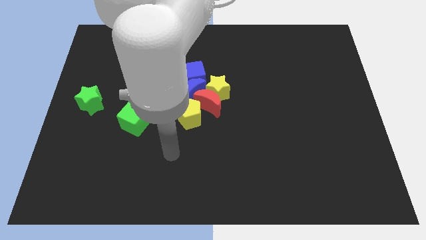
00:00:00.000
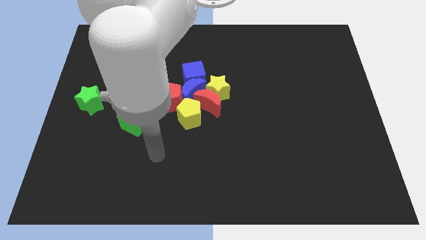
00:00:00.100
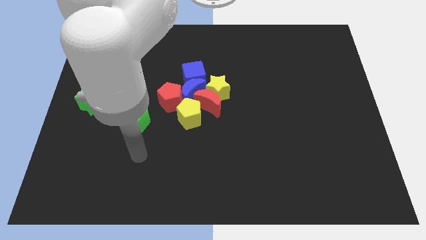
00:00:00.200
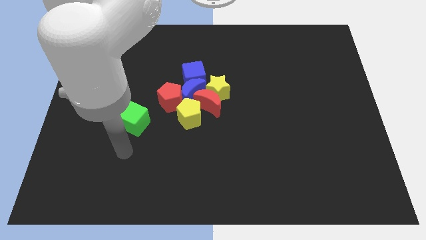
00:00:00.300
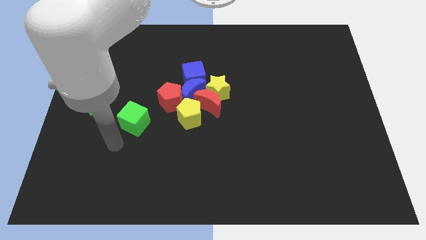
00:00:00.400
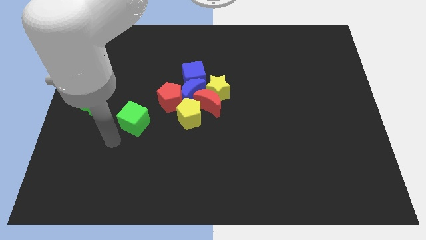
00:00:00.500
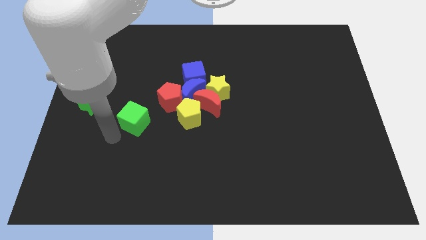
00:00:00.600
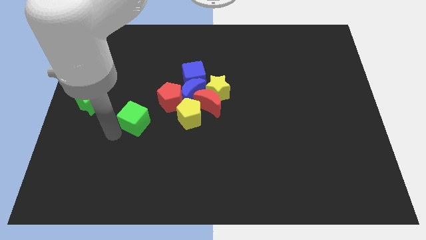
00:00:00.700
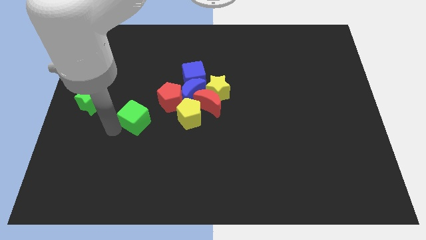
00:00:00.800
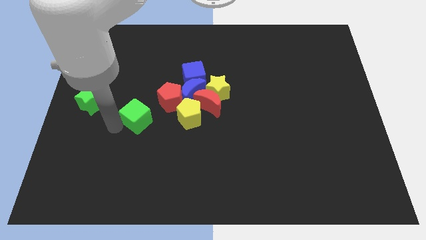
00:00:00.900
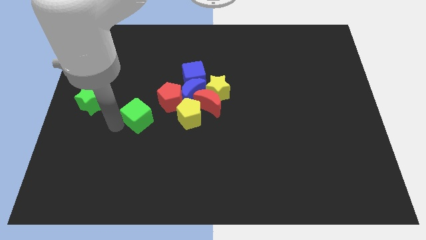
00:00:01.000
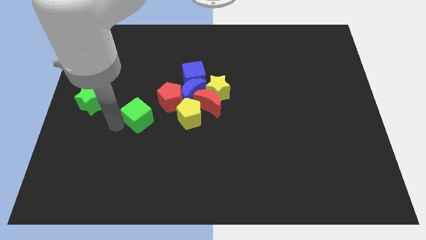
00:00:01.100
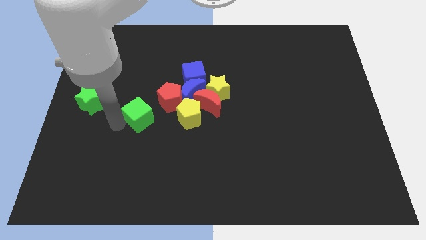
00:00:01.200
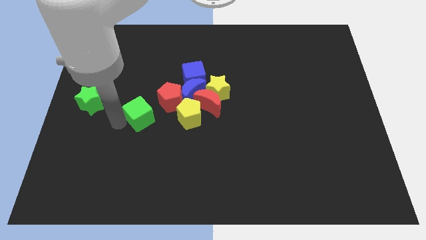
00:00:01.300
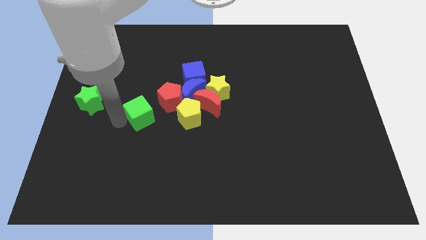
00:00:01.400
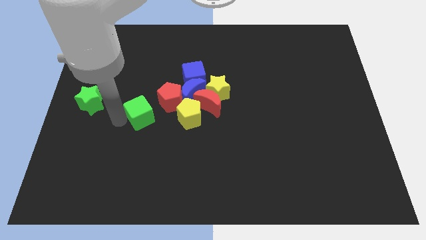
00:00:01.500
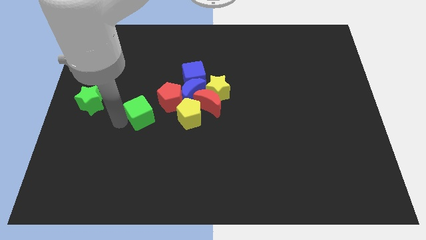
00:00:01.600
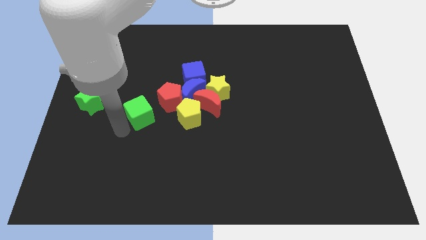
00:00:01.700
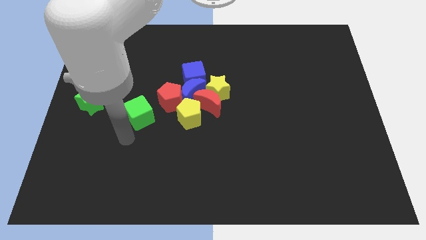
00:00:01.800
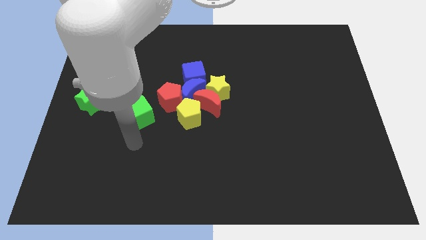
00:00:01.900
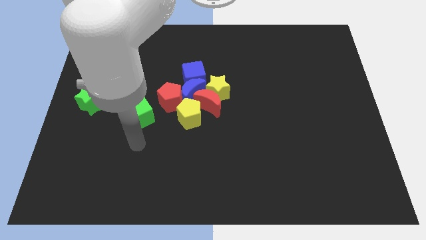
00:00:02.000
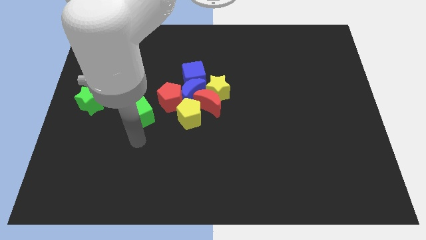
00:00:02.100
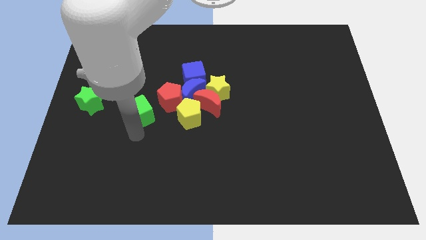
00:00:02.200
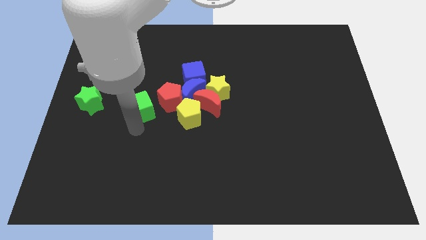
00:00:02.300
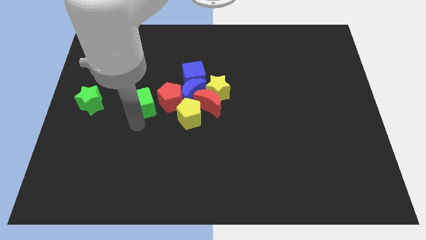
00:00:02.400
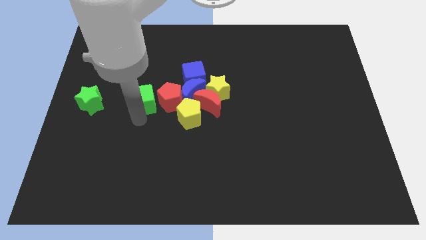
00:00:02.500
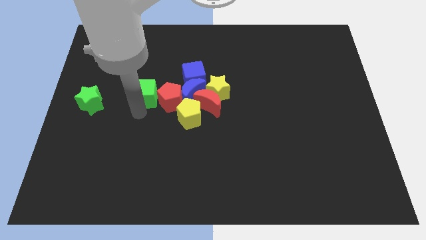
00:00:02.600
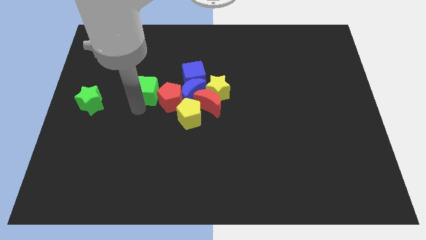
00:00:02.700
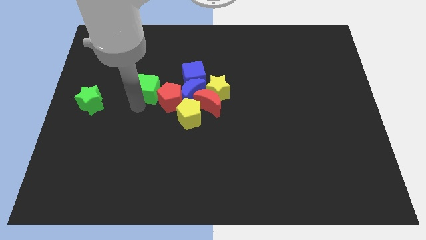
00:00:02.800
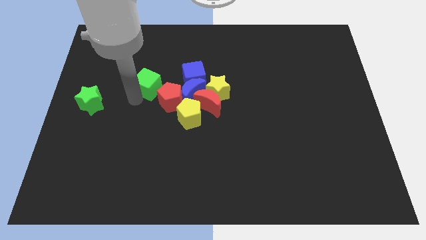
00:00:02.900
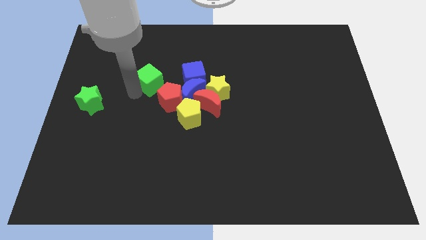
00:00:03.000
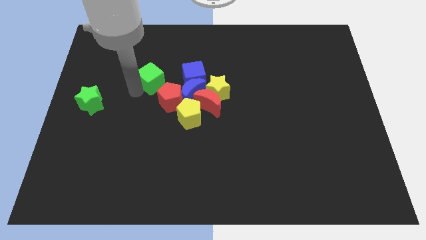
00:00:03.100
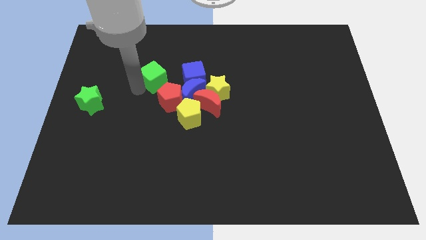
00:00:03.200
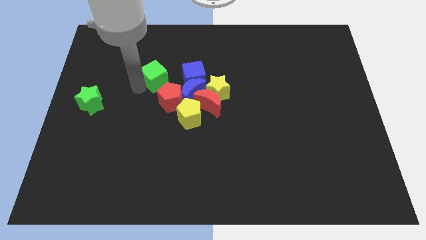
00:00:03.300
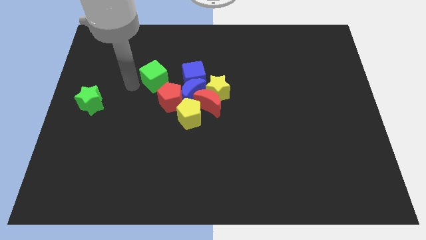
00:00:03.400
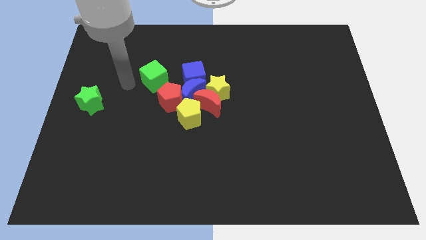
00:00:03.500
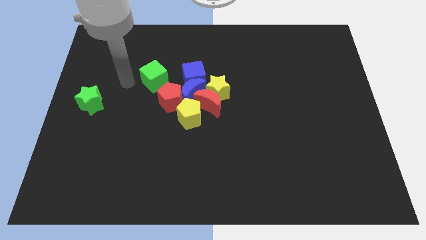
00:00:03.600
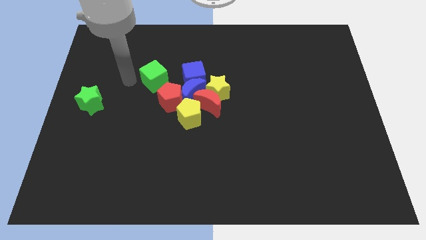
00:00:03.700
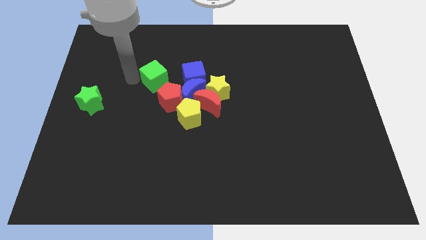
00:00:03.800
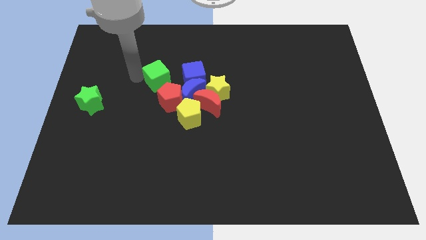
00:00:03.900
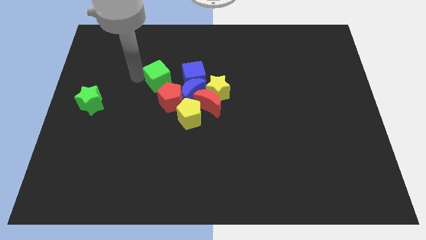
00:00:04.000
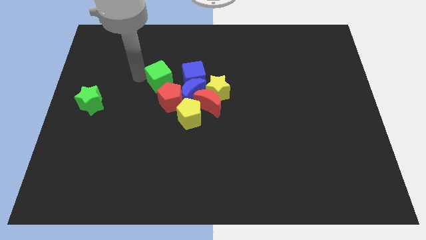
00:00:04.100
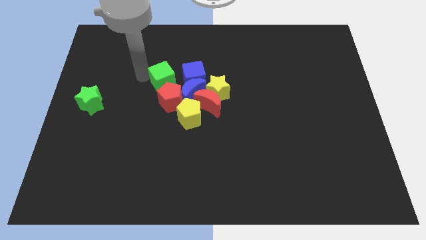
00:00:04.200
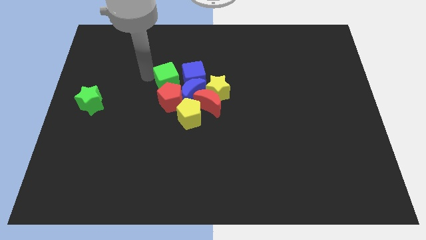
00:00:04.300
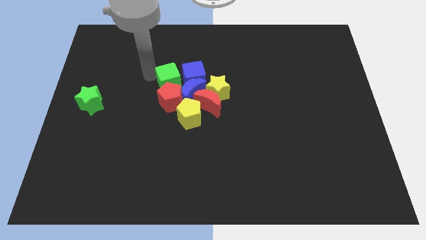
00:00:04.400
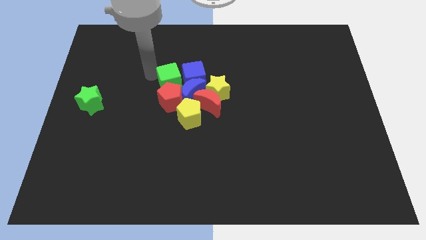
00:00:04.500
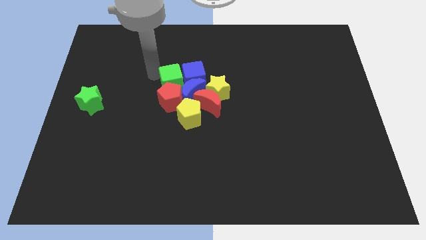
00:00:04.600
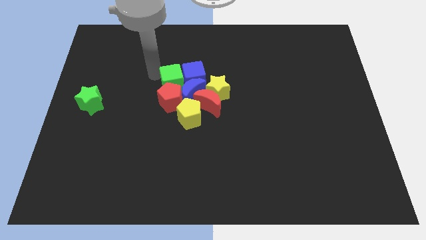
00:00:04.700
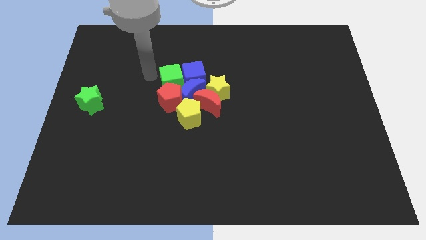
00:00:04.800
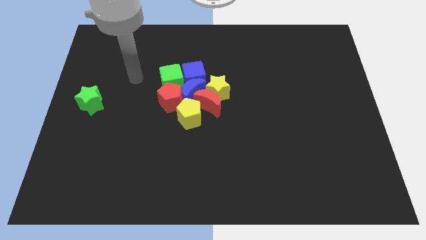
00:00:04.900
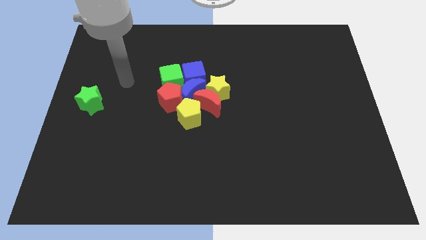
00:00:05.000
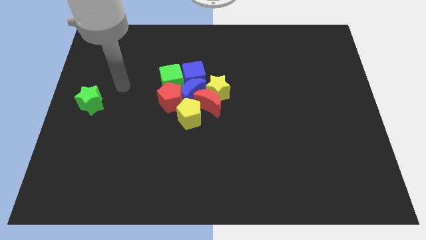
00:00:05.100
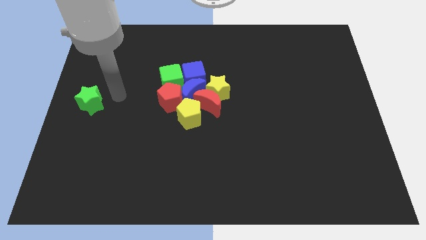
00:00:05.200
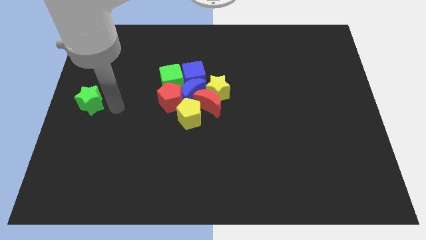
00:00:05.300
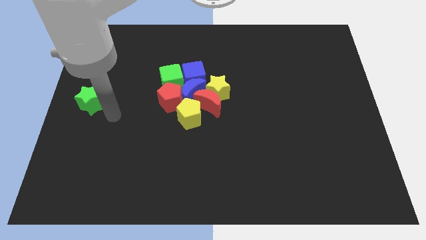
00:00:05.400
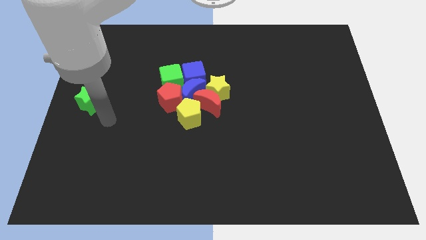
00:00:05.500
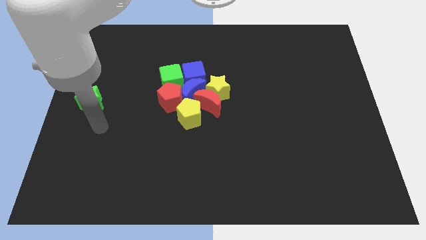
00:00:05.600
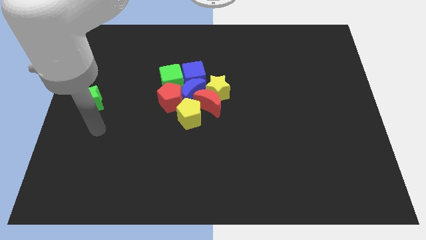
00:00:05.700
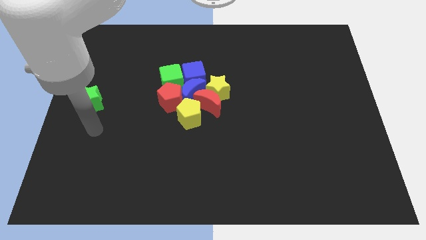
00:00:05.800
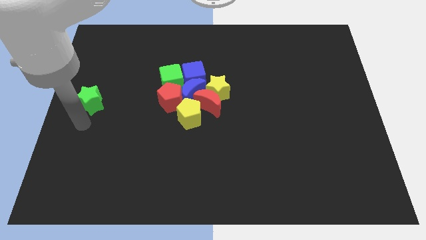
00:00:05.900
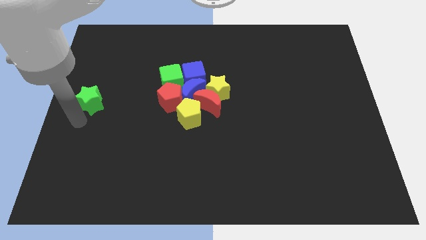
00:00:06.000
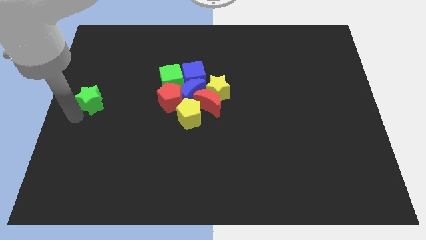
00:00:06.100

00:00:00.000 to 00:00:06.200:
move the green cube to the center of the board

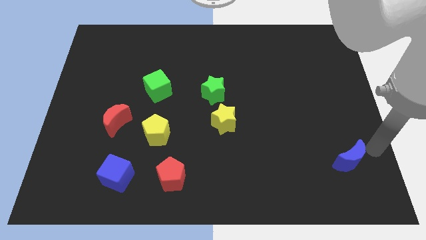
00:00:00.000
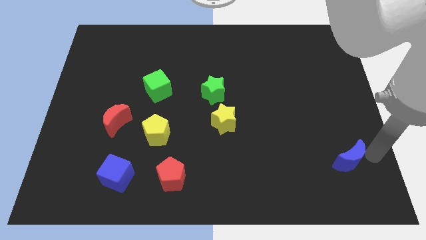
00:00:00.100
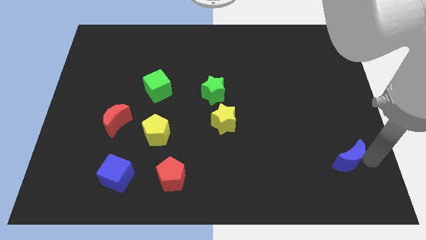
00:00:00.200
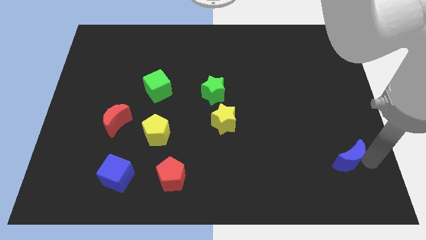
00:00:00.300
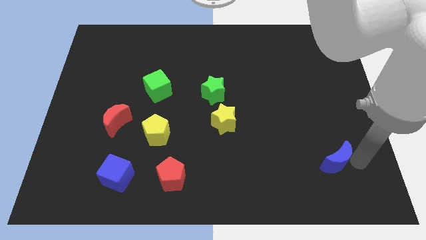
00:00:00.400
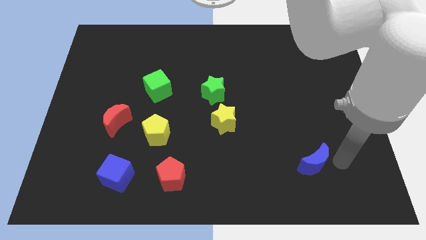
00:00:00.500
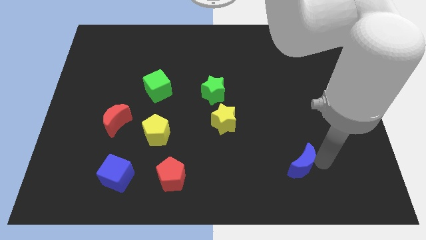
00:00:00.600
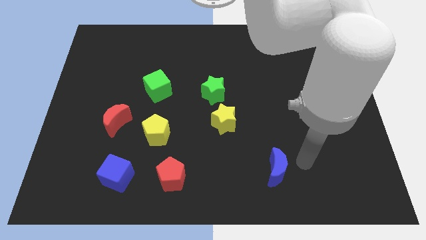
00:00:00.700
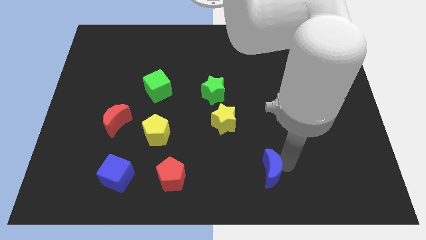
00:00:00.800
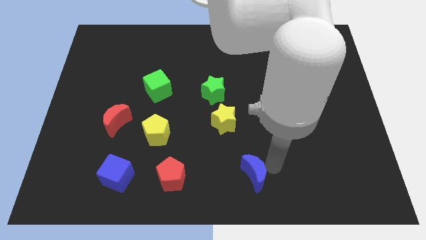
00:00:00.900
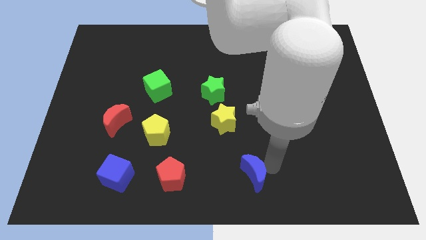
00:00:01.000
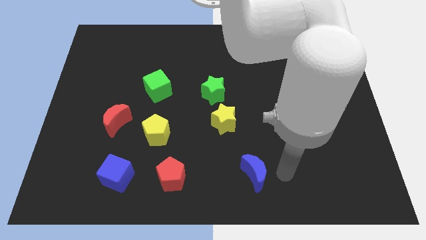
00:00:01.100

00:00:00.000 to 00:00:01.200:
move the blue crescent parallel to the red pentagon

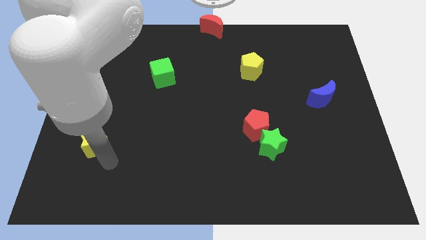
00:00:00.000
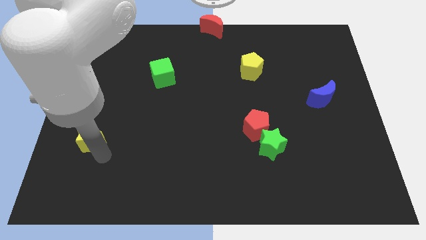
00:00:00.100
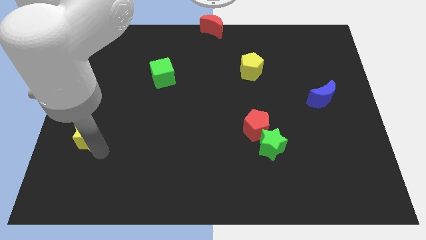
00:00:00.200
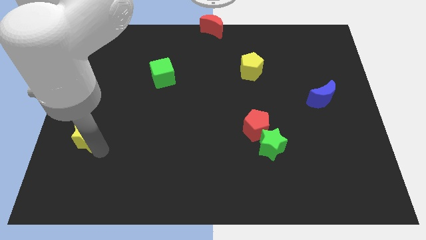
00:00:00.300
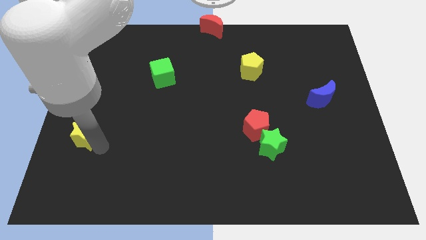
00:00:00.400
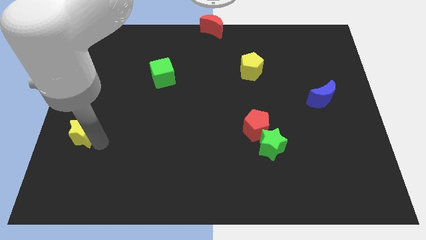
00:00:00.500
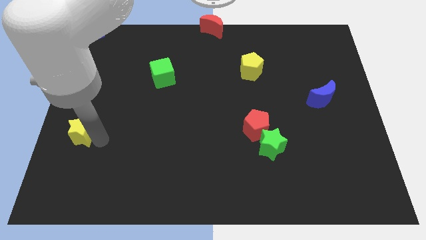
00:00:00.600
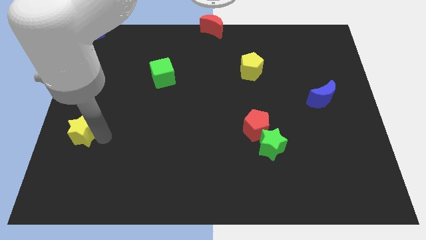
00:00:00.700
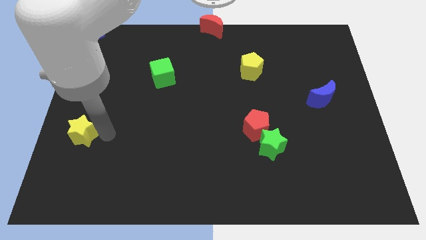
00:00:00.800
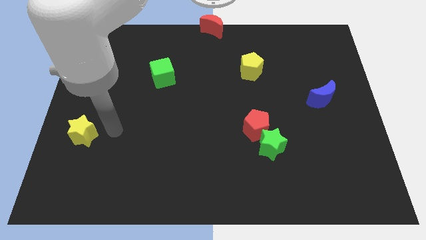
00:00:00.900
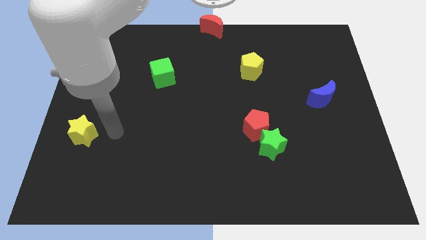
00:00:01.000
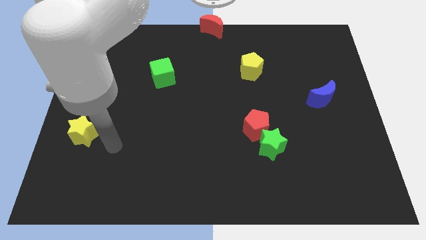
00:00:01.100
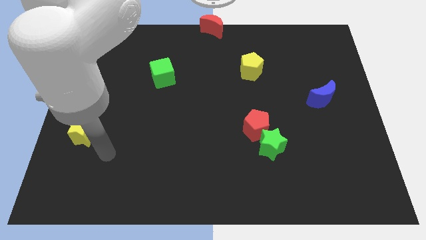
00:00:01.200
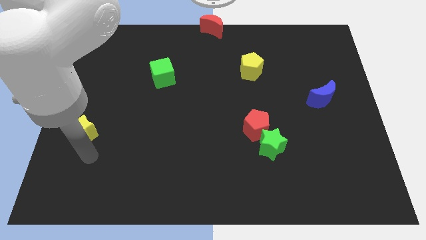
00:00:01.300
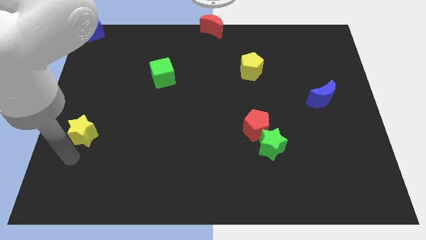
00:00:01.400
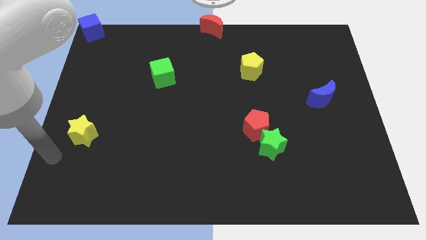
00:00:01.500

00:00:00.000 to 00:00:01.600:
place the yellow star diagonal to the green cube
